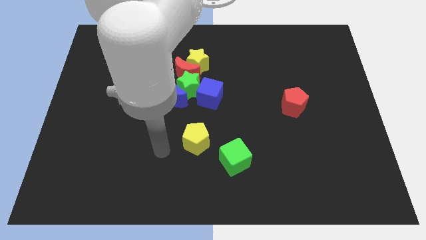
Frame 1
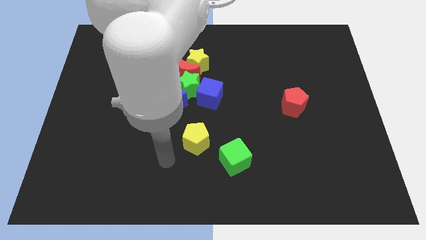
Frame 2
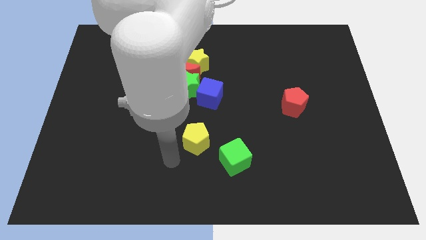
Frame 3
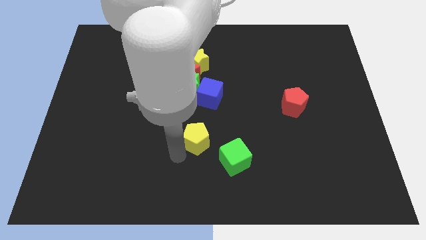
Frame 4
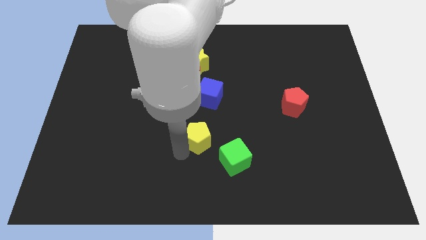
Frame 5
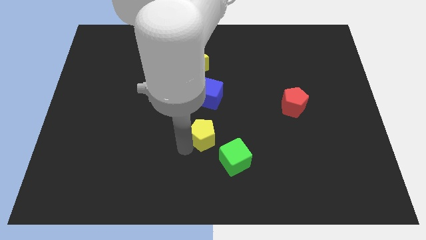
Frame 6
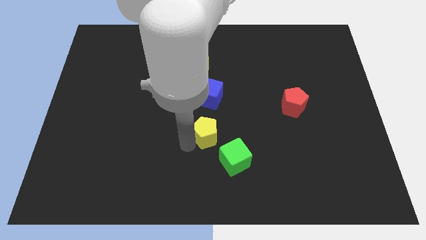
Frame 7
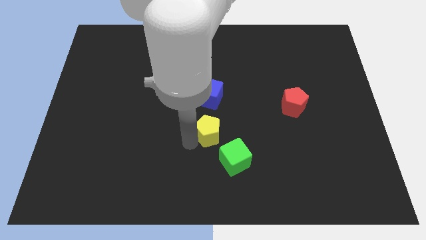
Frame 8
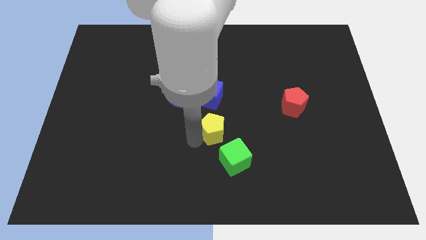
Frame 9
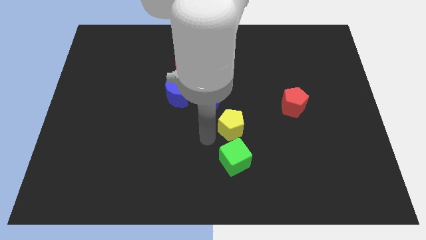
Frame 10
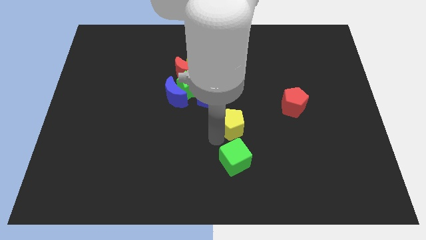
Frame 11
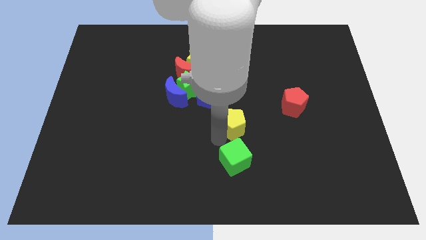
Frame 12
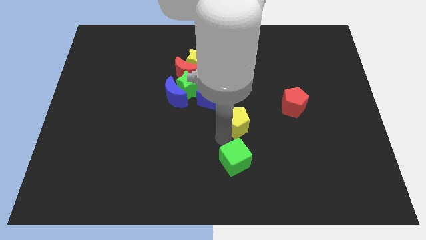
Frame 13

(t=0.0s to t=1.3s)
move the yellow pentagon diagonally top right of green cube

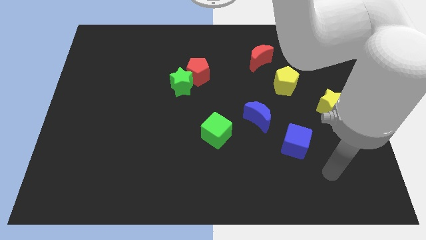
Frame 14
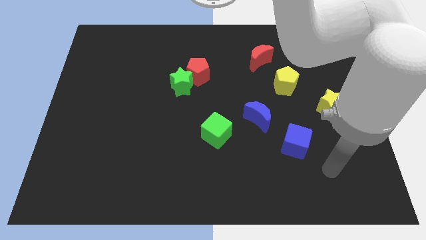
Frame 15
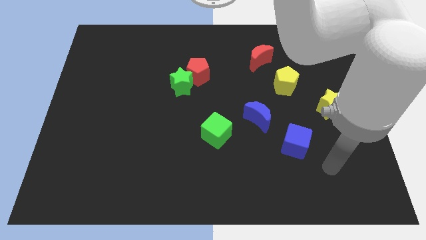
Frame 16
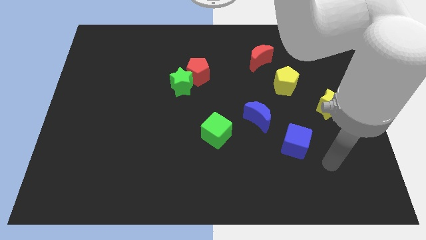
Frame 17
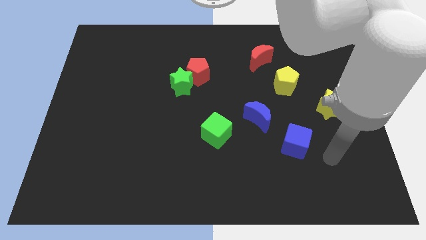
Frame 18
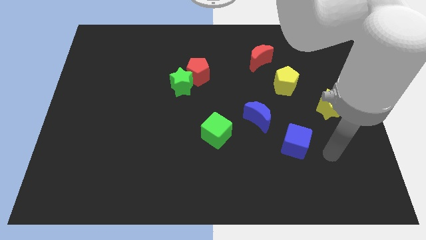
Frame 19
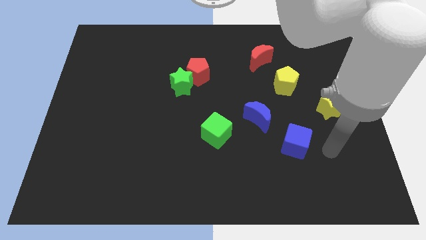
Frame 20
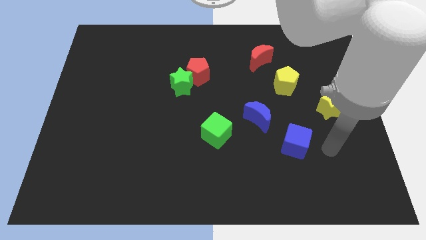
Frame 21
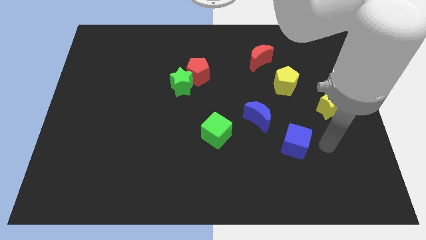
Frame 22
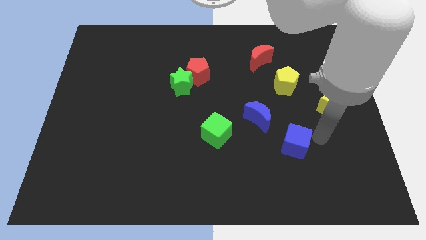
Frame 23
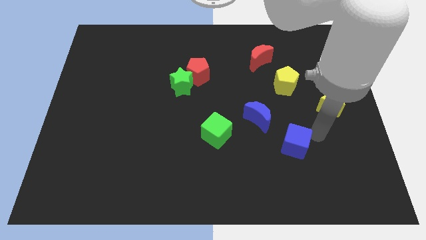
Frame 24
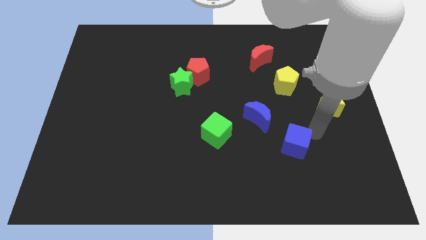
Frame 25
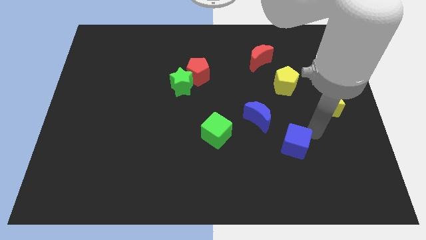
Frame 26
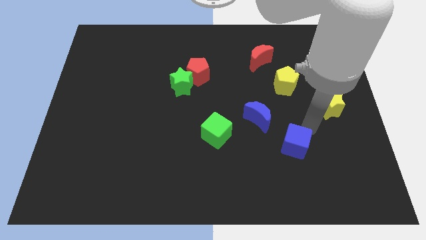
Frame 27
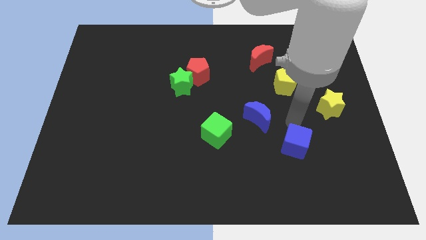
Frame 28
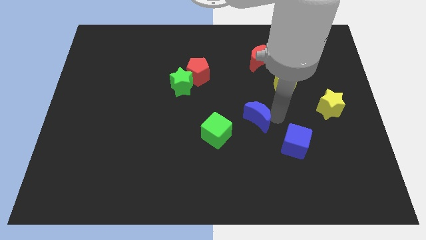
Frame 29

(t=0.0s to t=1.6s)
point your arm above blue moon

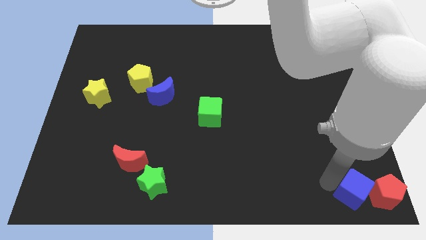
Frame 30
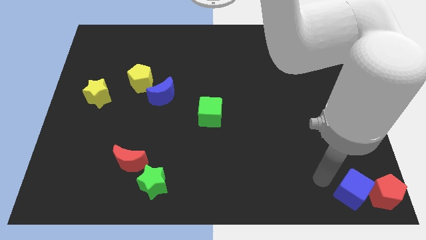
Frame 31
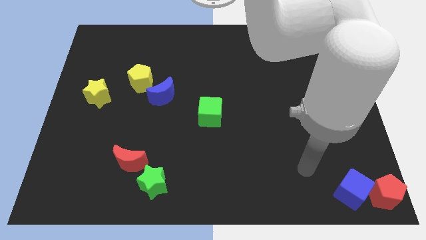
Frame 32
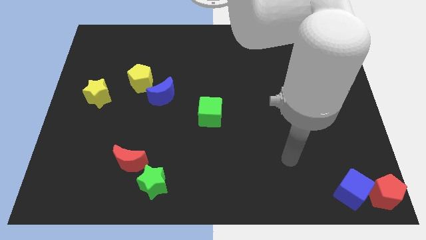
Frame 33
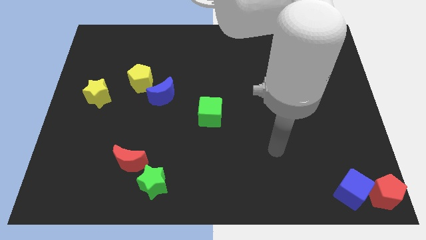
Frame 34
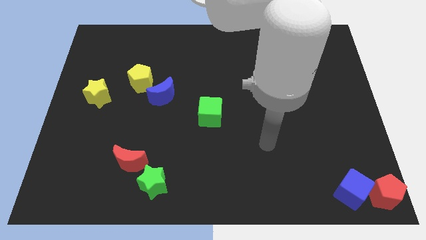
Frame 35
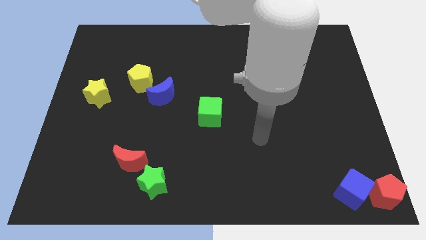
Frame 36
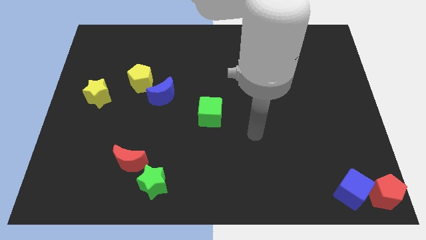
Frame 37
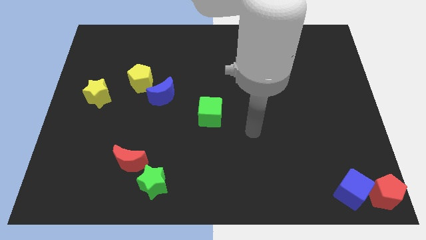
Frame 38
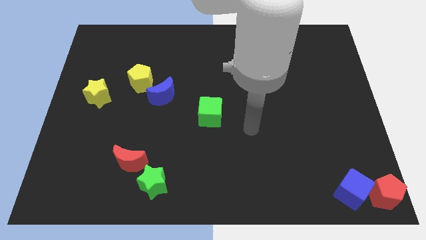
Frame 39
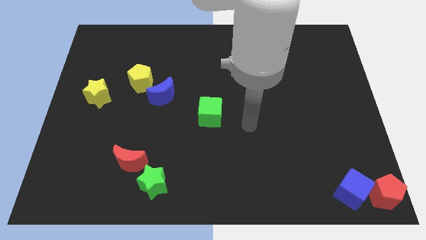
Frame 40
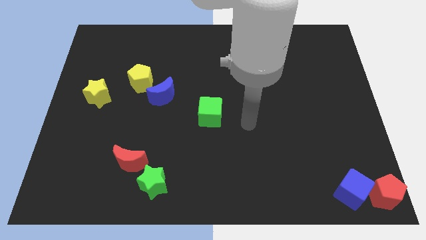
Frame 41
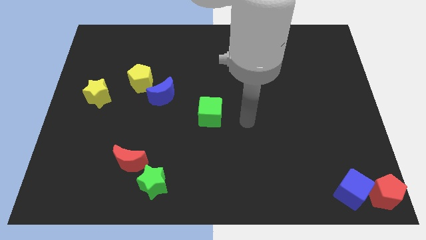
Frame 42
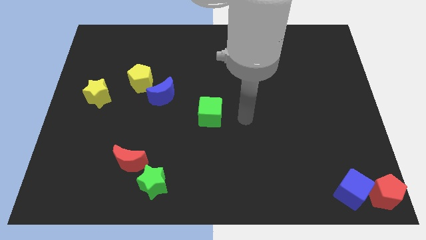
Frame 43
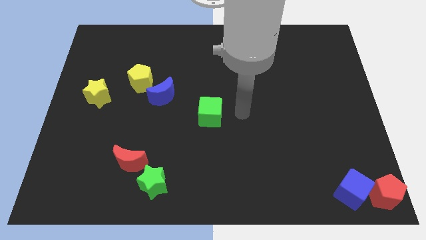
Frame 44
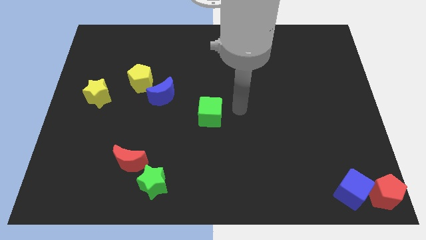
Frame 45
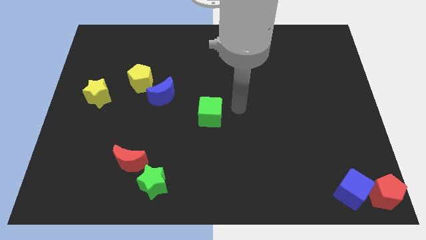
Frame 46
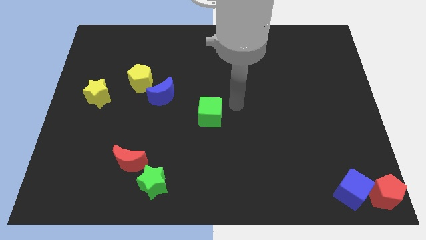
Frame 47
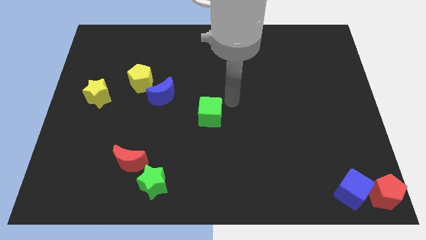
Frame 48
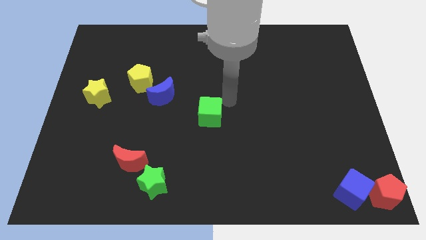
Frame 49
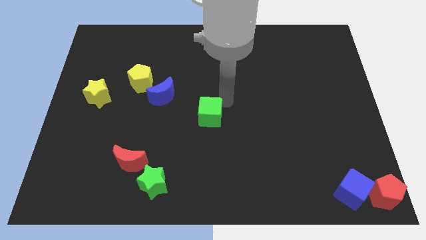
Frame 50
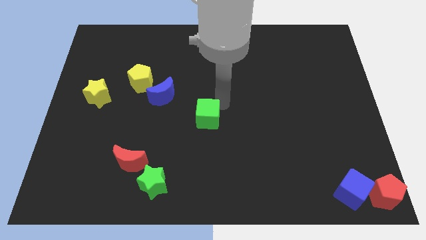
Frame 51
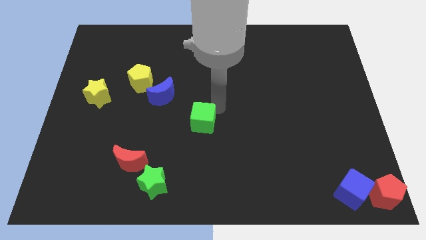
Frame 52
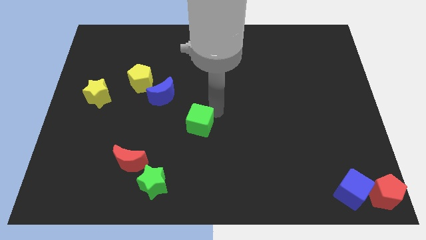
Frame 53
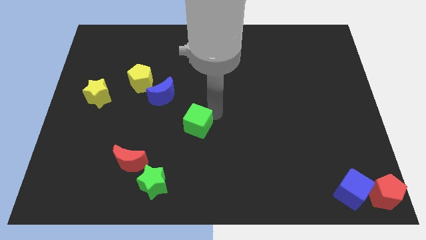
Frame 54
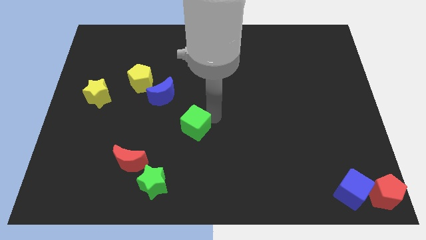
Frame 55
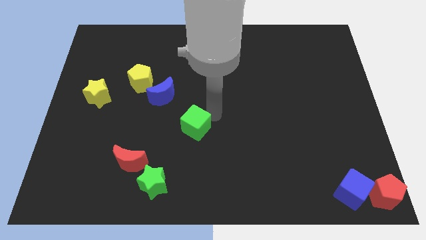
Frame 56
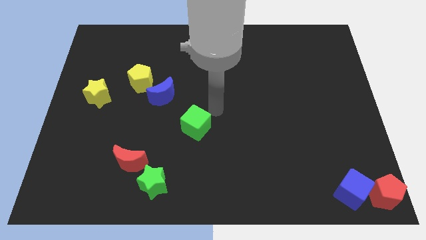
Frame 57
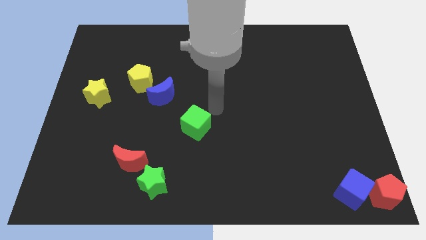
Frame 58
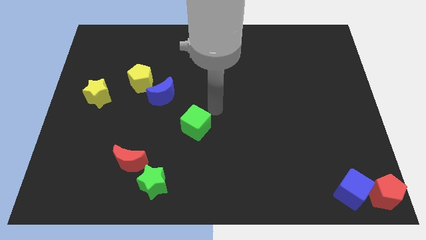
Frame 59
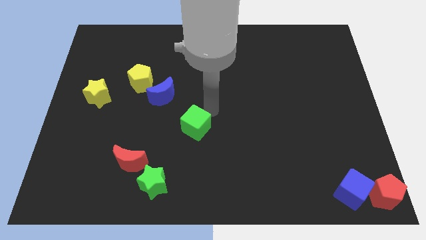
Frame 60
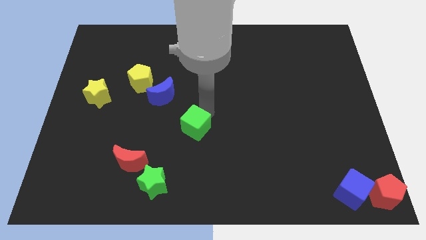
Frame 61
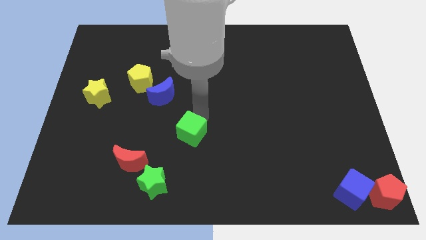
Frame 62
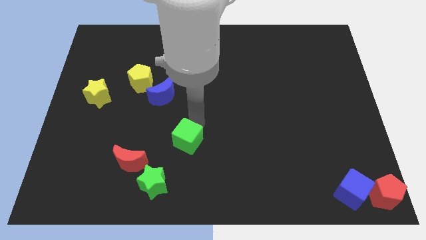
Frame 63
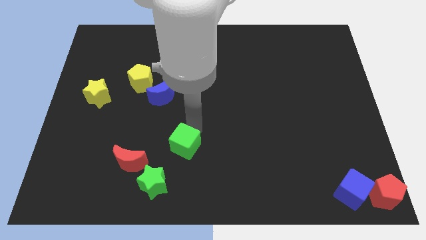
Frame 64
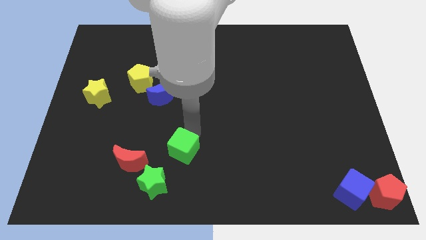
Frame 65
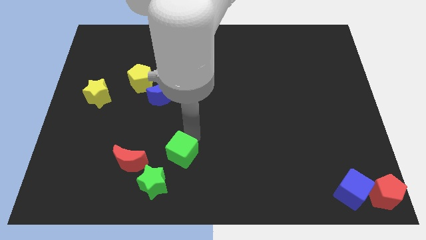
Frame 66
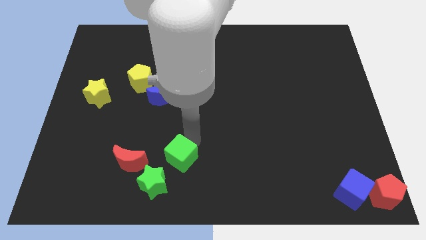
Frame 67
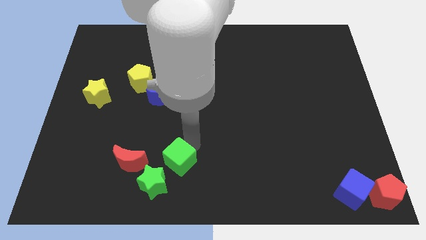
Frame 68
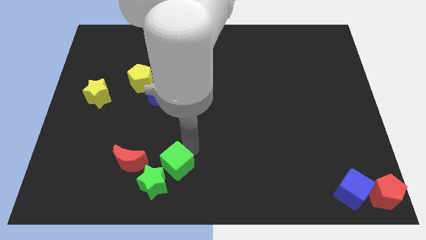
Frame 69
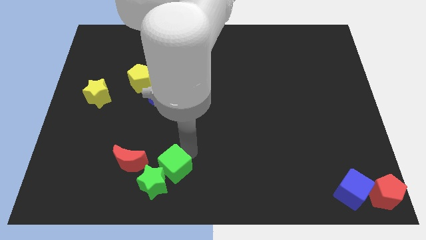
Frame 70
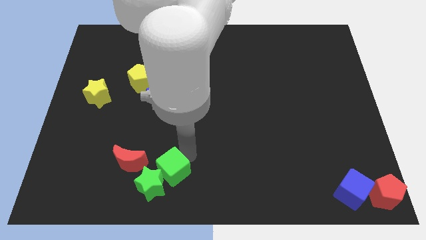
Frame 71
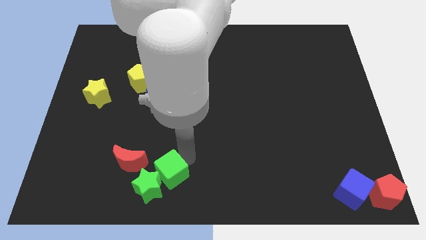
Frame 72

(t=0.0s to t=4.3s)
drag the green cube into the top right side of the green star

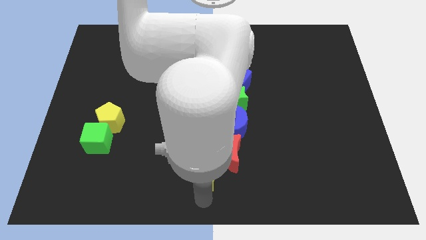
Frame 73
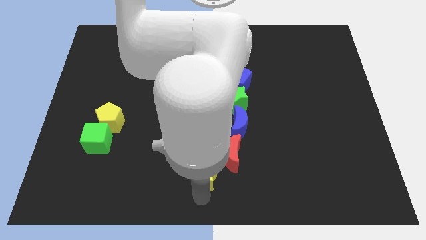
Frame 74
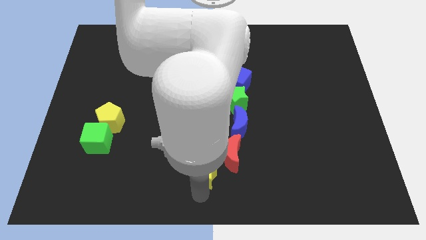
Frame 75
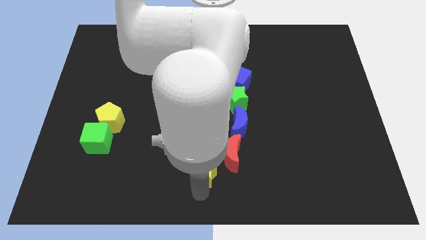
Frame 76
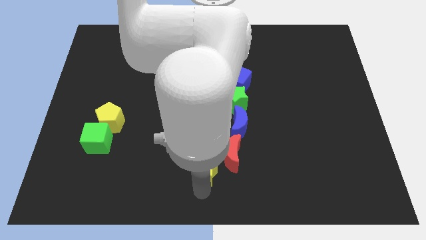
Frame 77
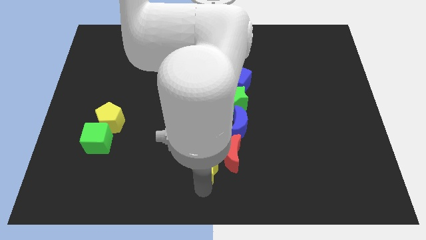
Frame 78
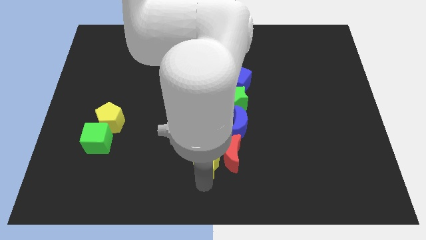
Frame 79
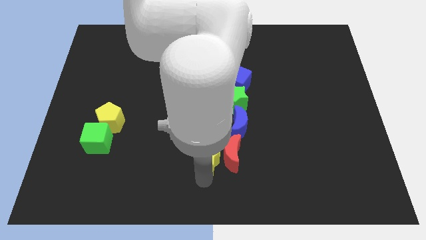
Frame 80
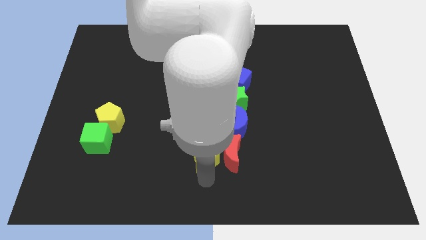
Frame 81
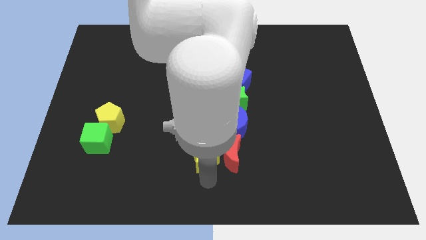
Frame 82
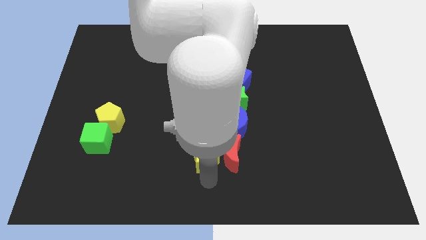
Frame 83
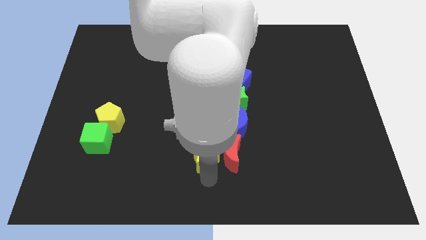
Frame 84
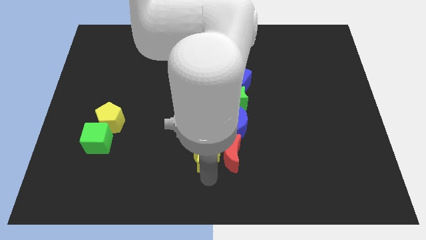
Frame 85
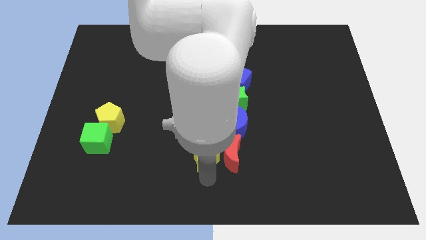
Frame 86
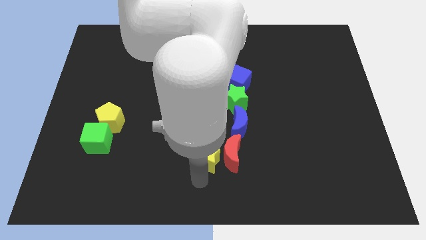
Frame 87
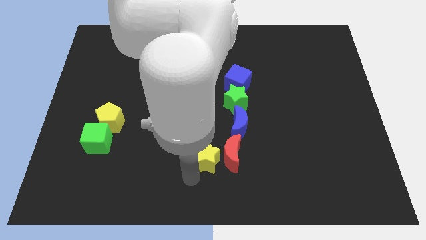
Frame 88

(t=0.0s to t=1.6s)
place the yellow star to the left of the red crescent

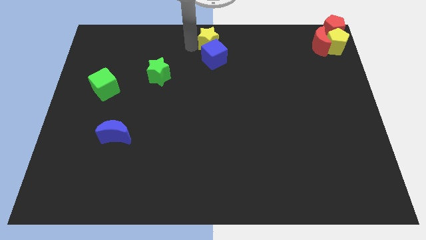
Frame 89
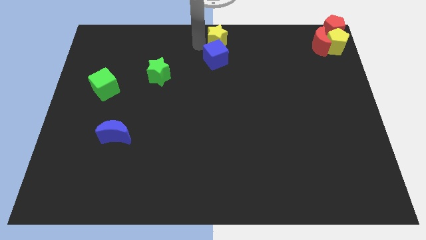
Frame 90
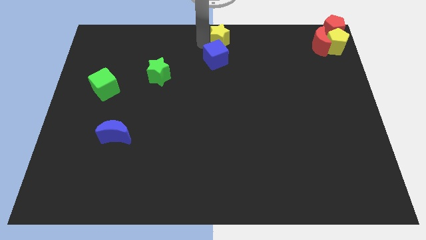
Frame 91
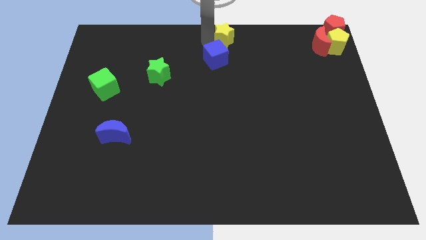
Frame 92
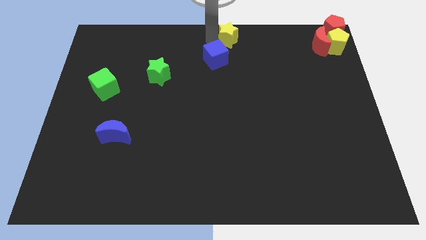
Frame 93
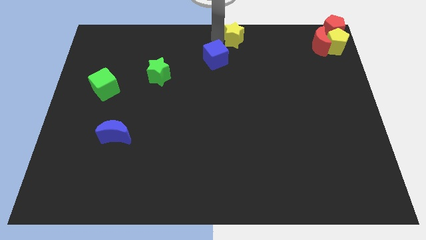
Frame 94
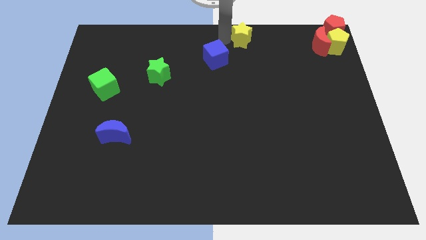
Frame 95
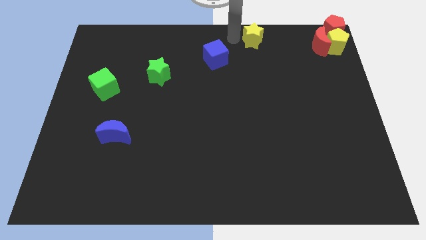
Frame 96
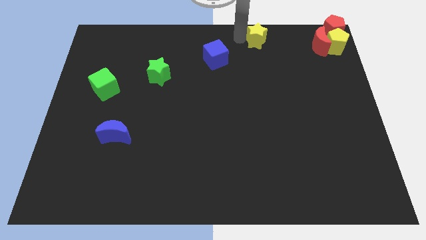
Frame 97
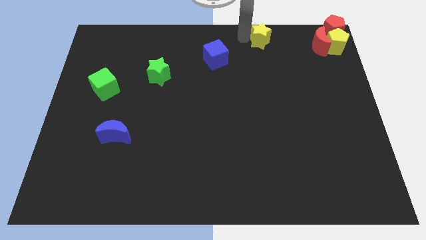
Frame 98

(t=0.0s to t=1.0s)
separate the yellow star and the blue cube
